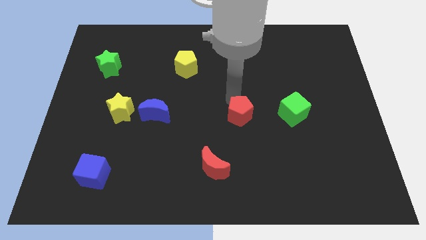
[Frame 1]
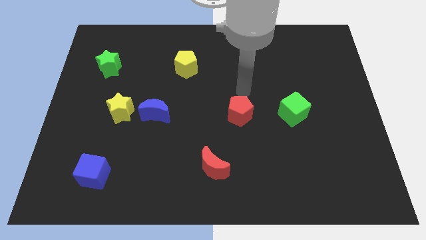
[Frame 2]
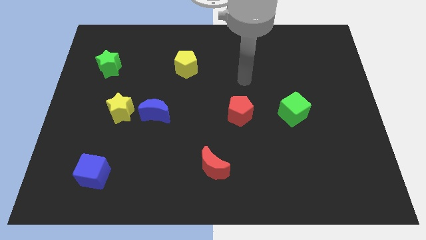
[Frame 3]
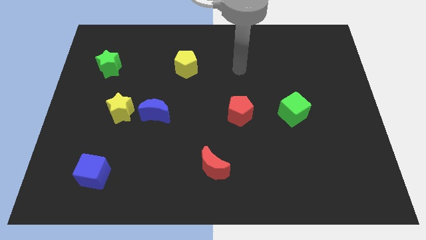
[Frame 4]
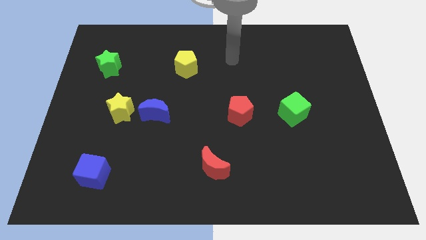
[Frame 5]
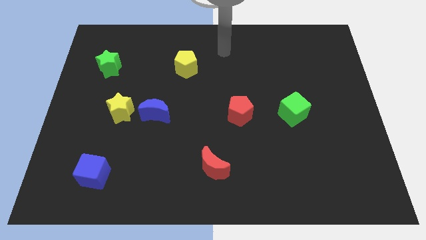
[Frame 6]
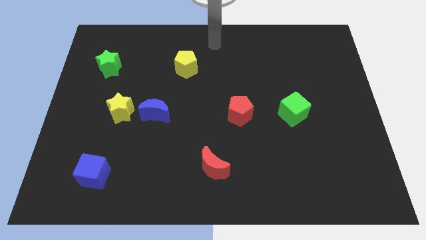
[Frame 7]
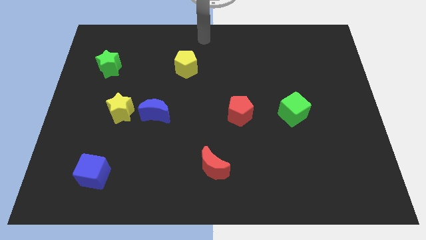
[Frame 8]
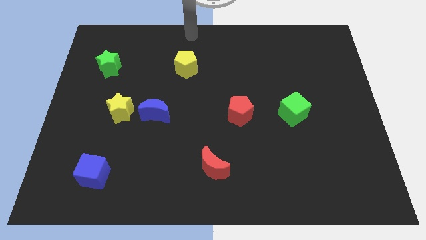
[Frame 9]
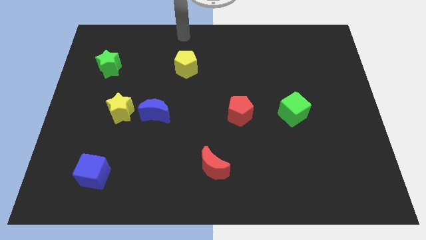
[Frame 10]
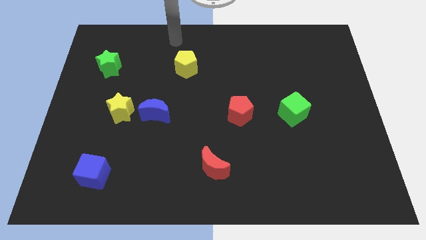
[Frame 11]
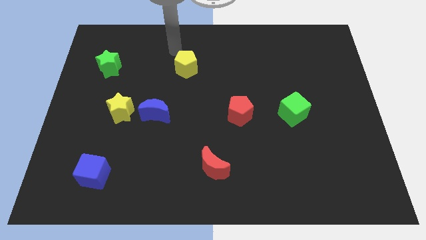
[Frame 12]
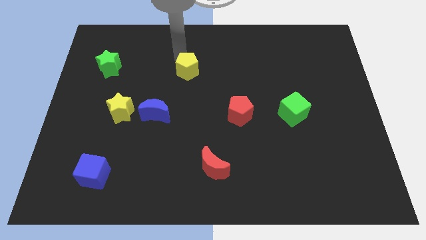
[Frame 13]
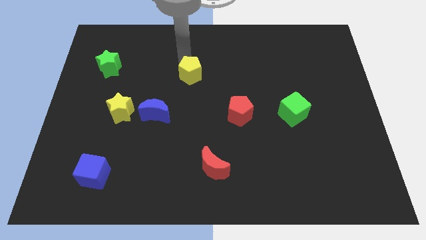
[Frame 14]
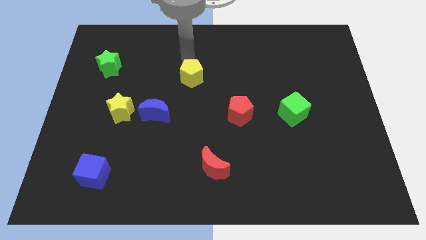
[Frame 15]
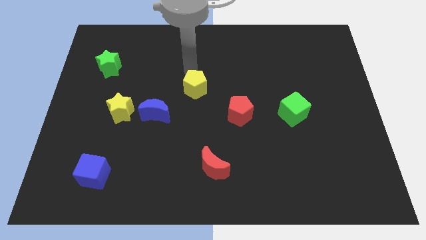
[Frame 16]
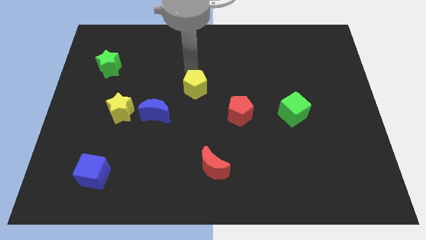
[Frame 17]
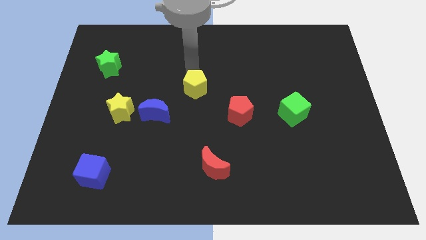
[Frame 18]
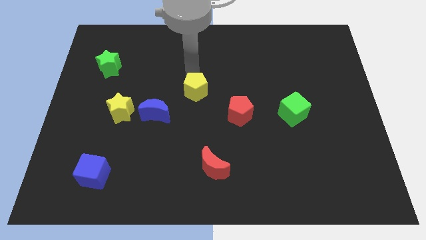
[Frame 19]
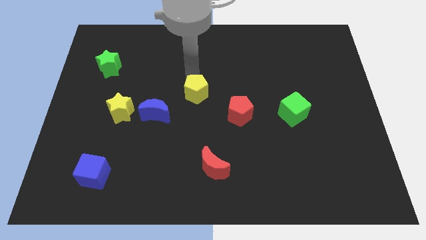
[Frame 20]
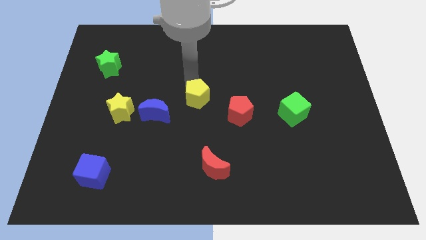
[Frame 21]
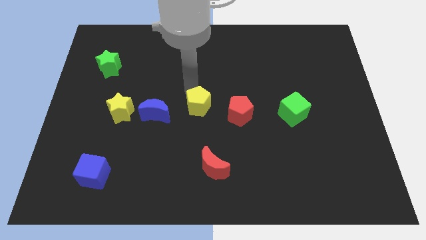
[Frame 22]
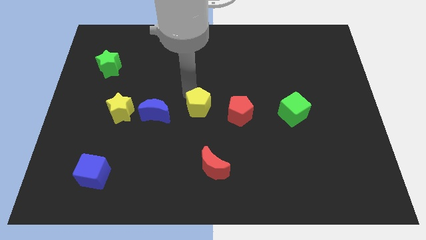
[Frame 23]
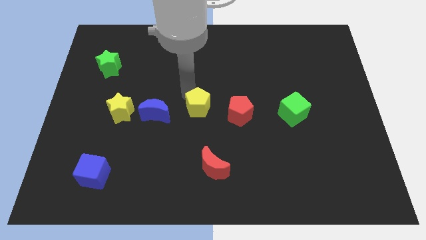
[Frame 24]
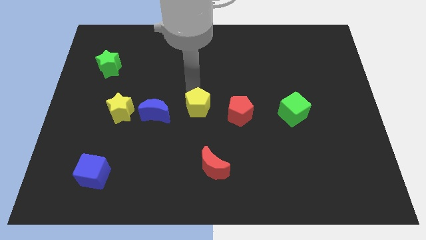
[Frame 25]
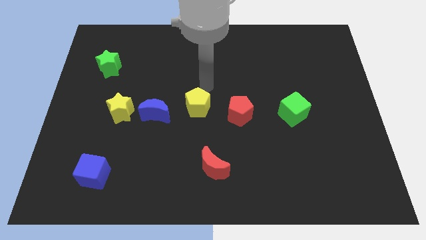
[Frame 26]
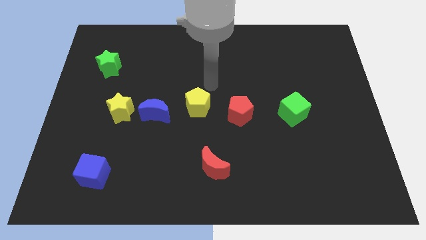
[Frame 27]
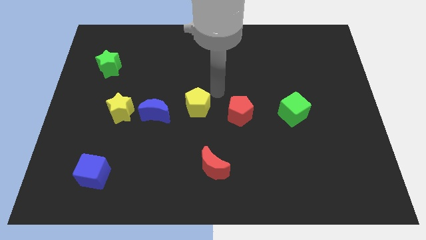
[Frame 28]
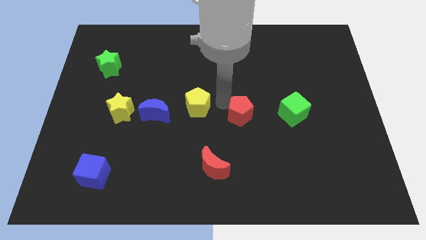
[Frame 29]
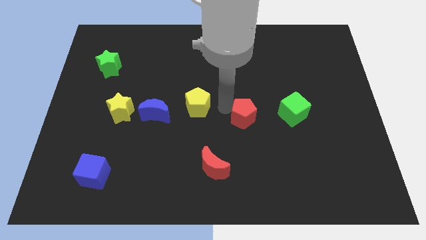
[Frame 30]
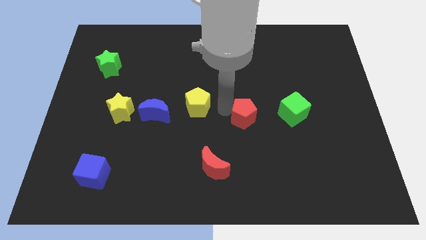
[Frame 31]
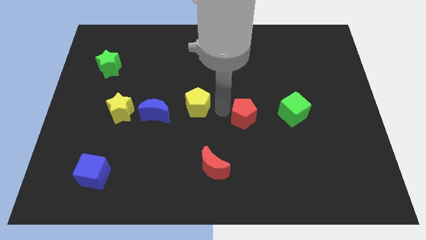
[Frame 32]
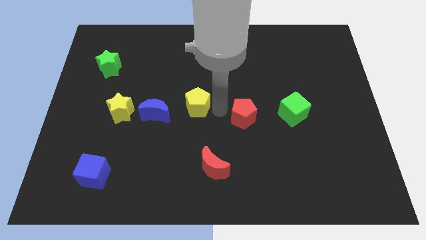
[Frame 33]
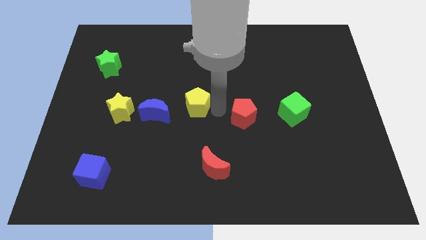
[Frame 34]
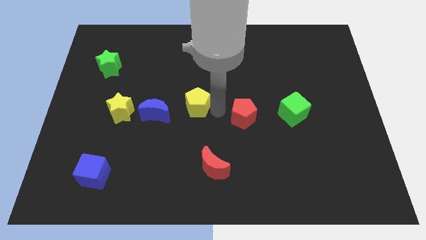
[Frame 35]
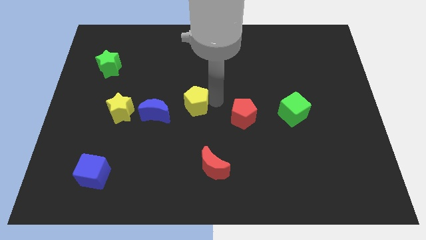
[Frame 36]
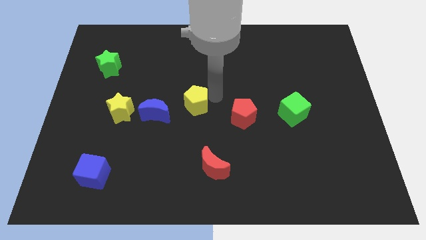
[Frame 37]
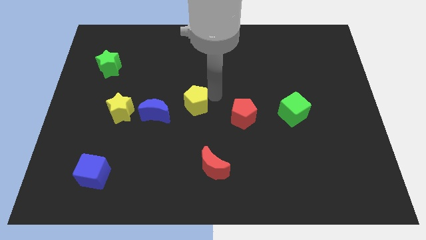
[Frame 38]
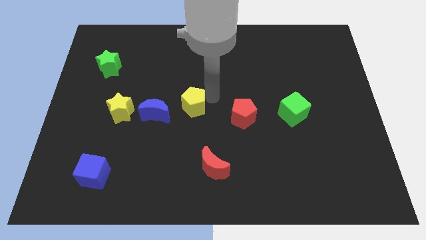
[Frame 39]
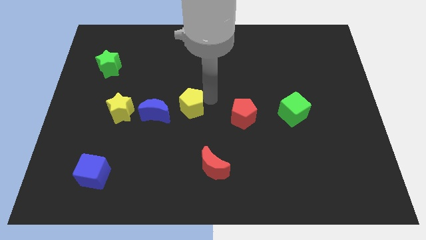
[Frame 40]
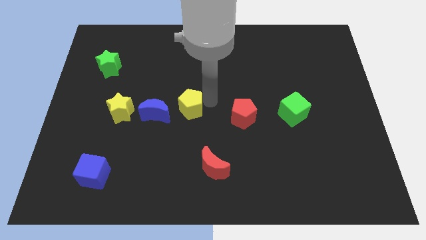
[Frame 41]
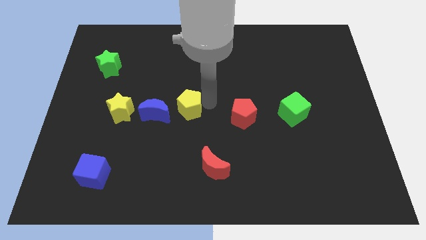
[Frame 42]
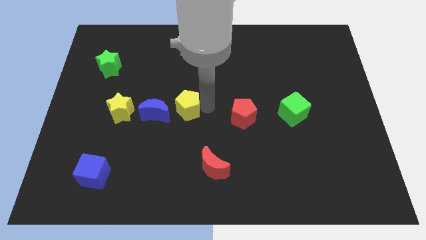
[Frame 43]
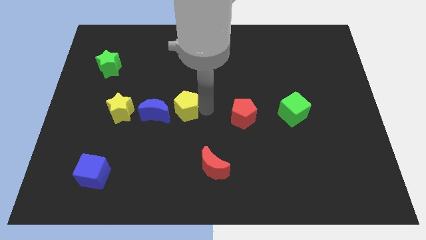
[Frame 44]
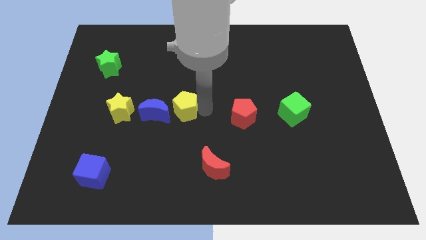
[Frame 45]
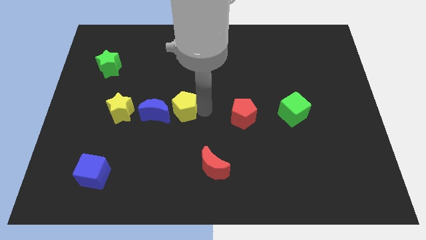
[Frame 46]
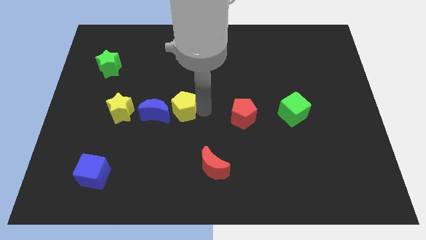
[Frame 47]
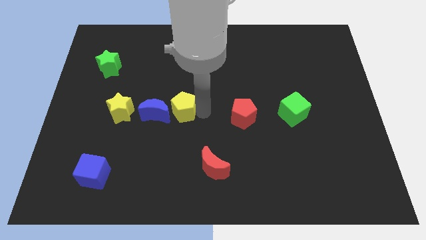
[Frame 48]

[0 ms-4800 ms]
move the yellow pentagon close to the blue moon

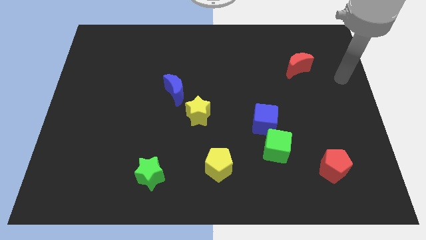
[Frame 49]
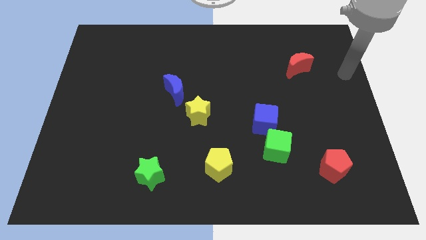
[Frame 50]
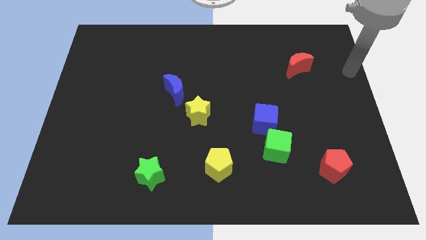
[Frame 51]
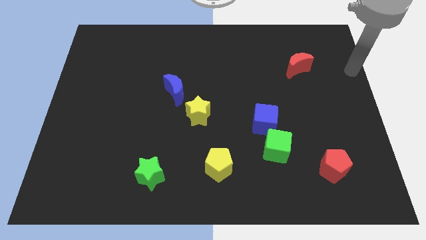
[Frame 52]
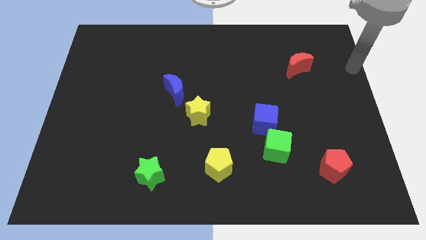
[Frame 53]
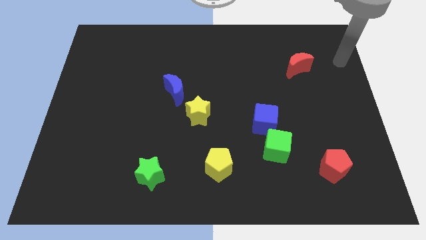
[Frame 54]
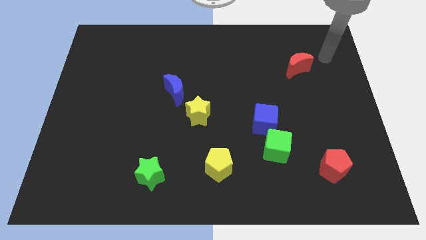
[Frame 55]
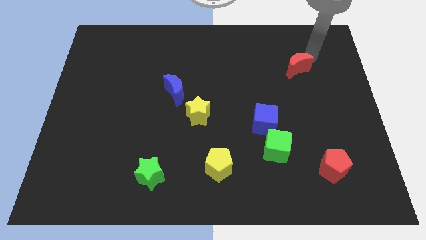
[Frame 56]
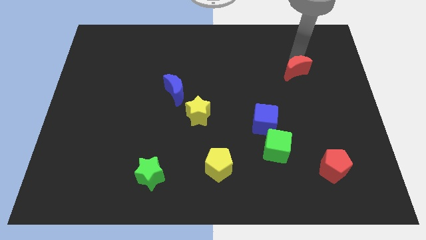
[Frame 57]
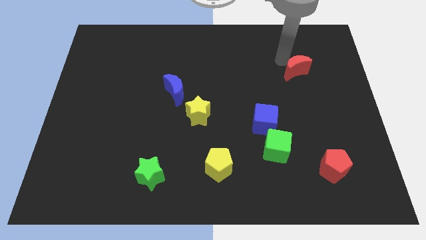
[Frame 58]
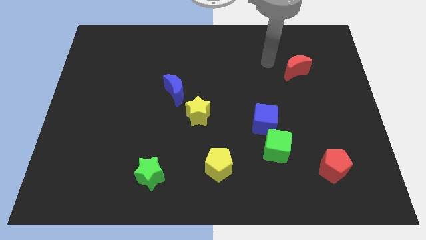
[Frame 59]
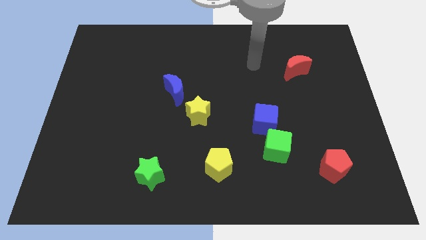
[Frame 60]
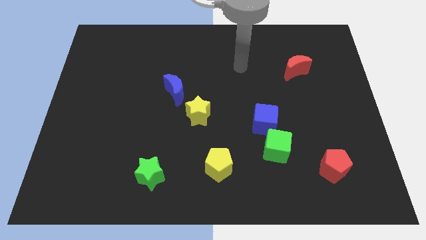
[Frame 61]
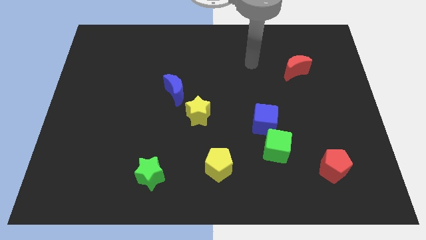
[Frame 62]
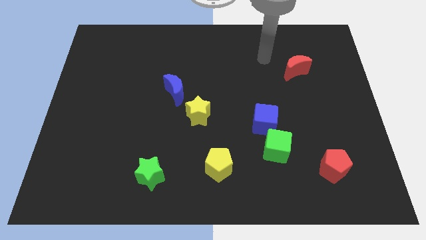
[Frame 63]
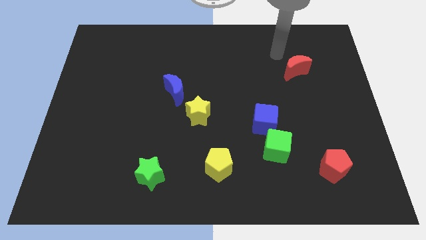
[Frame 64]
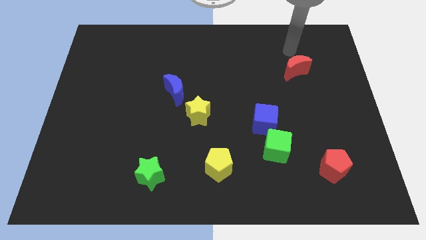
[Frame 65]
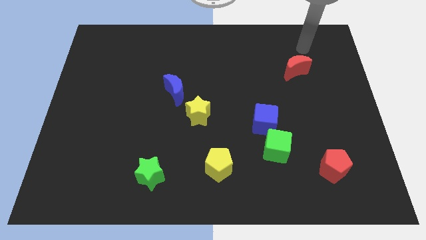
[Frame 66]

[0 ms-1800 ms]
move the red moon slightly

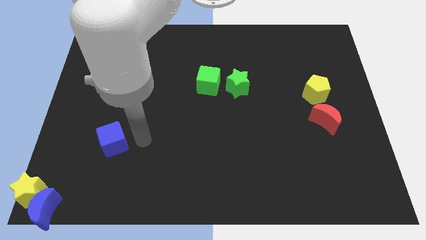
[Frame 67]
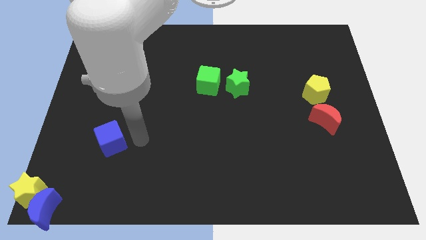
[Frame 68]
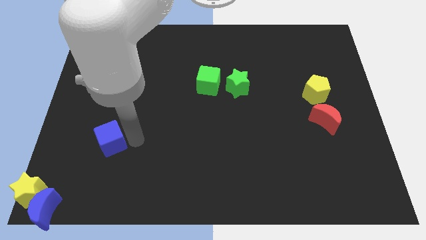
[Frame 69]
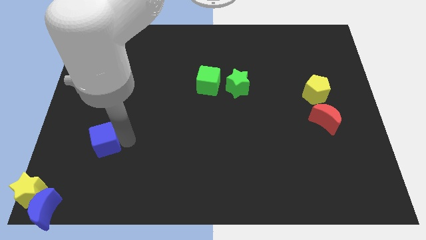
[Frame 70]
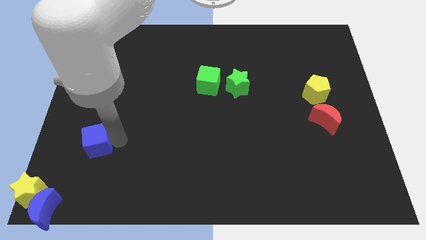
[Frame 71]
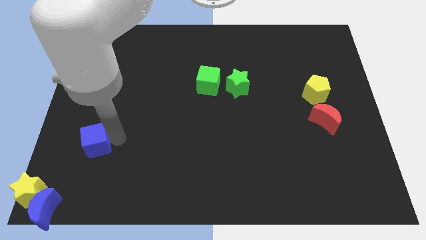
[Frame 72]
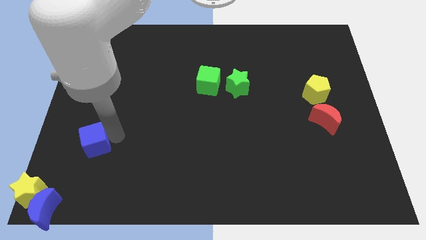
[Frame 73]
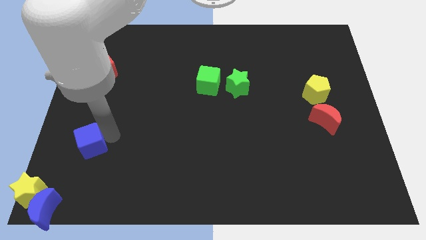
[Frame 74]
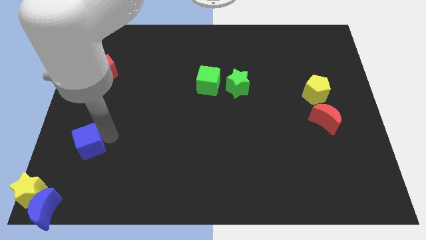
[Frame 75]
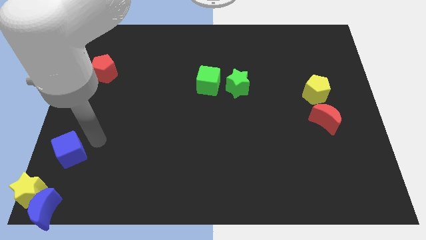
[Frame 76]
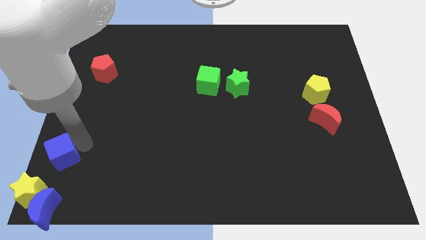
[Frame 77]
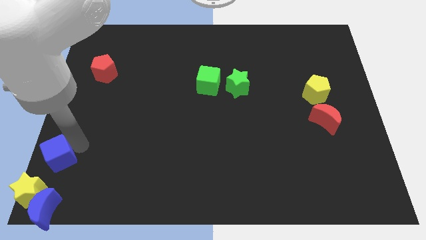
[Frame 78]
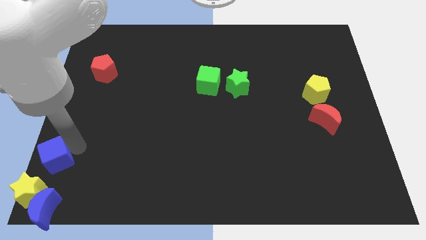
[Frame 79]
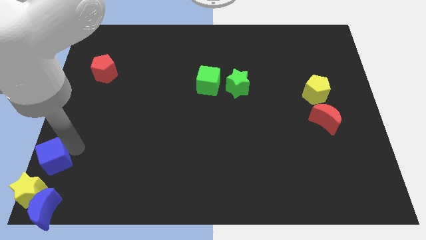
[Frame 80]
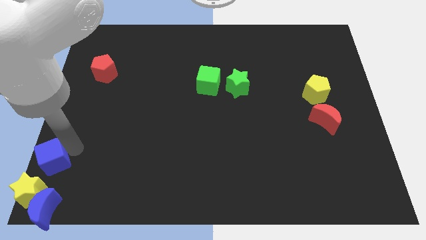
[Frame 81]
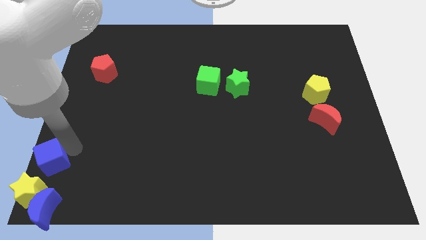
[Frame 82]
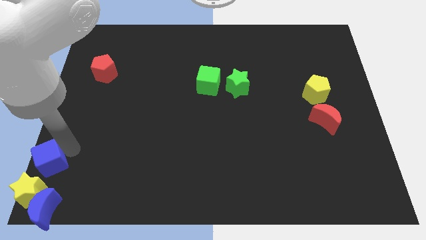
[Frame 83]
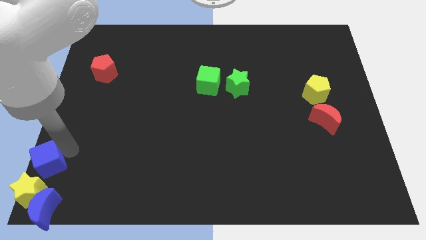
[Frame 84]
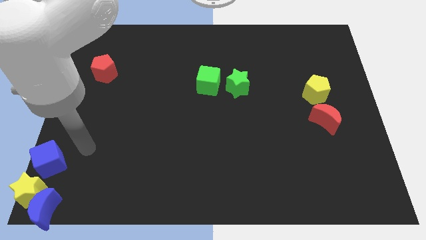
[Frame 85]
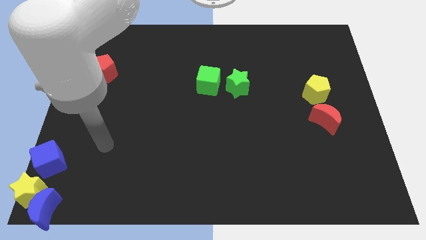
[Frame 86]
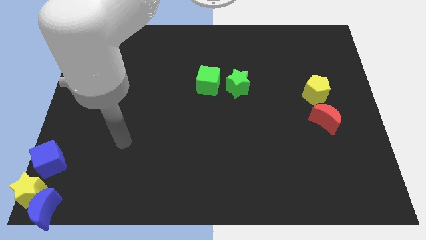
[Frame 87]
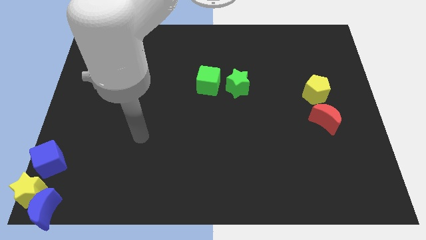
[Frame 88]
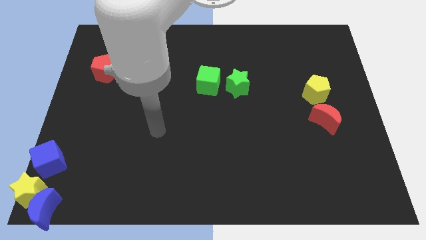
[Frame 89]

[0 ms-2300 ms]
put the blue cube above the yellow star

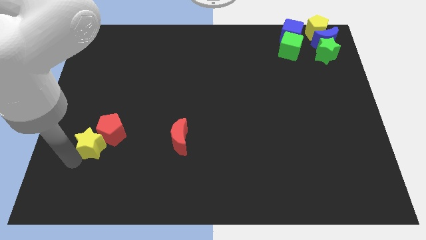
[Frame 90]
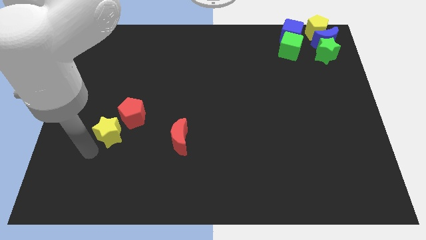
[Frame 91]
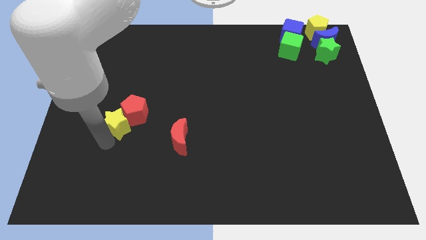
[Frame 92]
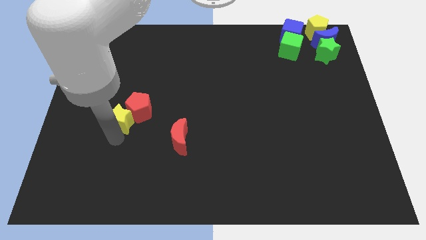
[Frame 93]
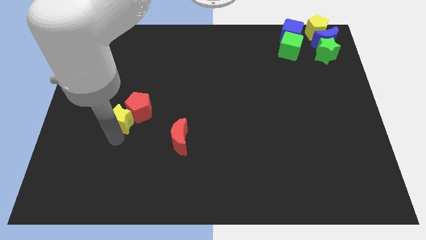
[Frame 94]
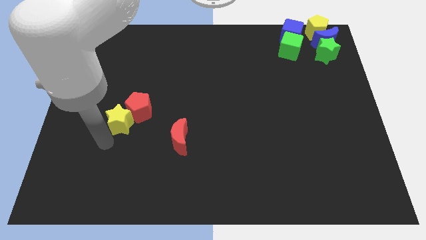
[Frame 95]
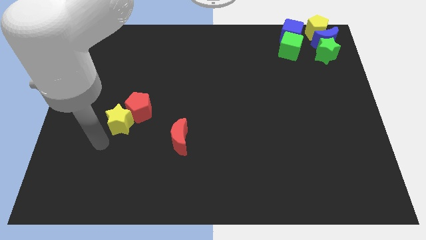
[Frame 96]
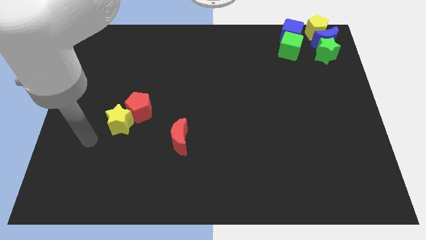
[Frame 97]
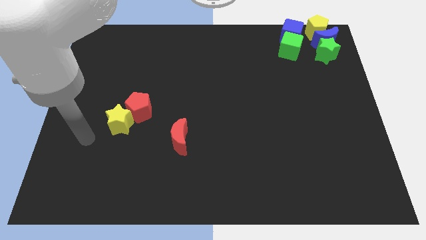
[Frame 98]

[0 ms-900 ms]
push the yellow star with the red pentagon to the left center of the board
